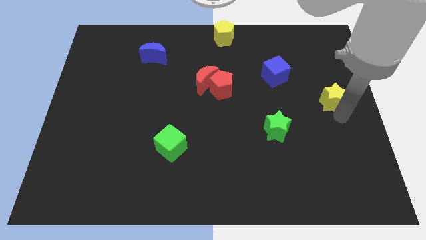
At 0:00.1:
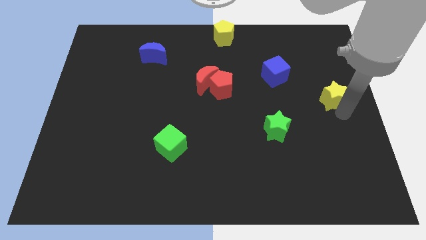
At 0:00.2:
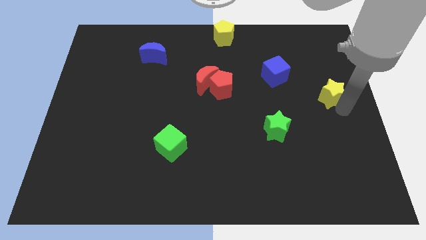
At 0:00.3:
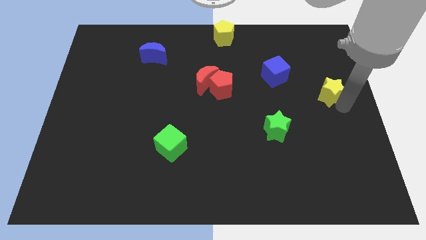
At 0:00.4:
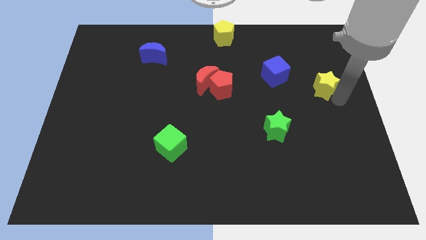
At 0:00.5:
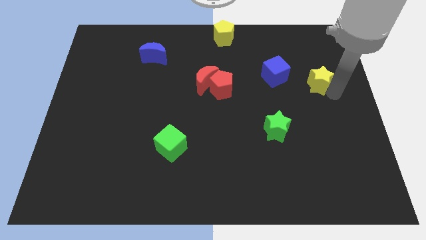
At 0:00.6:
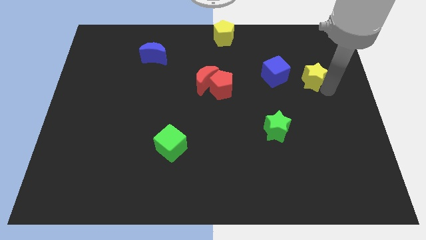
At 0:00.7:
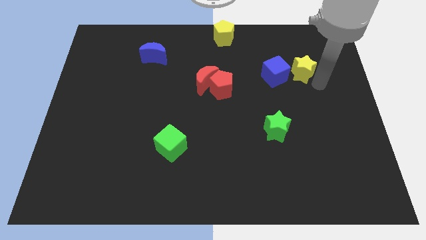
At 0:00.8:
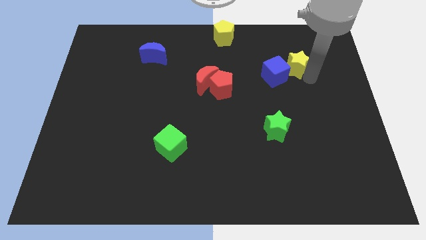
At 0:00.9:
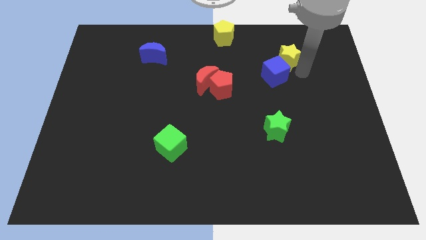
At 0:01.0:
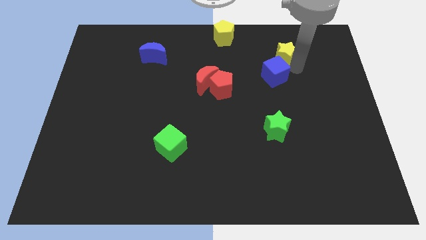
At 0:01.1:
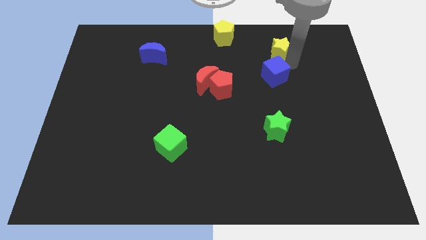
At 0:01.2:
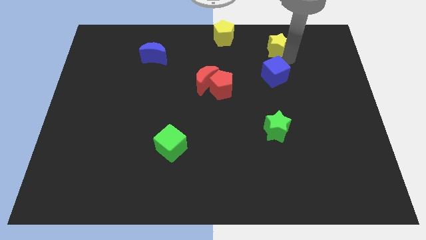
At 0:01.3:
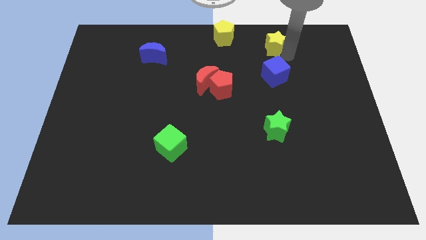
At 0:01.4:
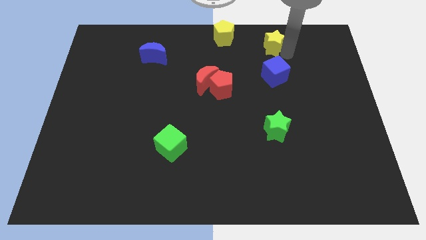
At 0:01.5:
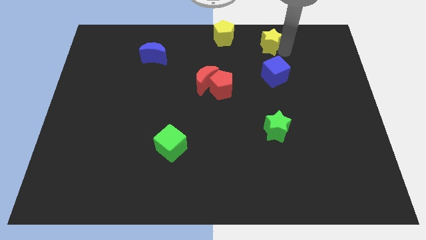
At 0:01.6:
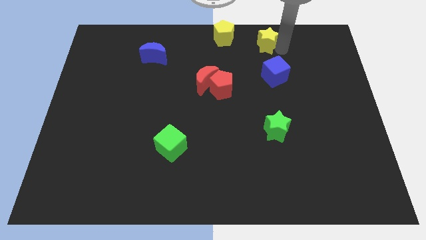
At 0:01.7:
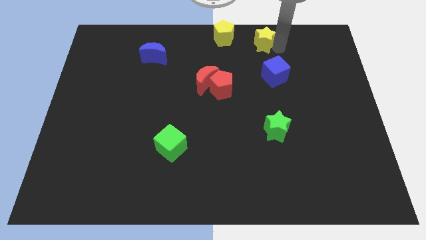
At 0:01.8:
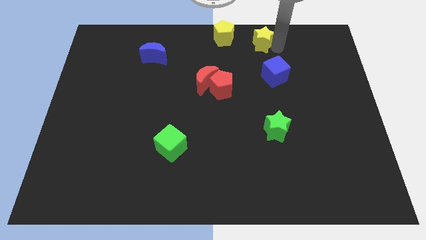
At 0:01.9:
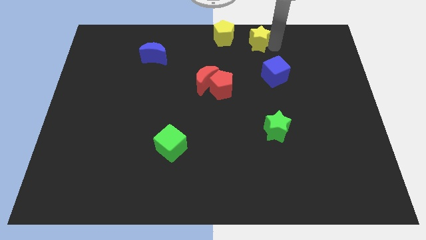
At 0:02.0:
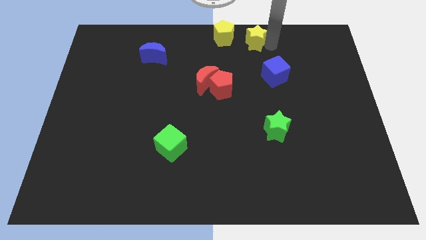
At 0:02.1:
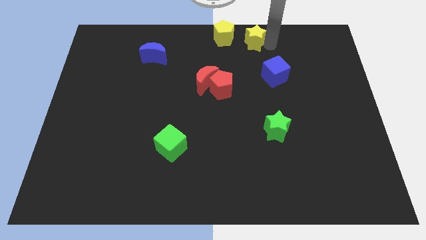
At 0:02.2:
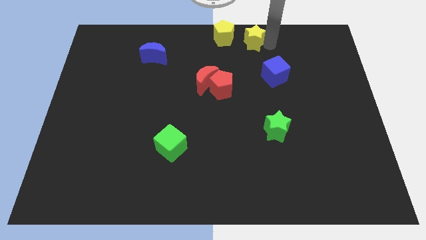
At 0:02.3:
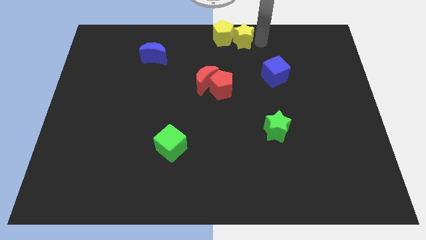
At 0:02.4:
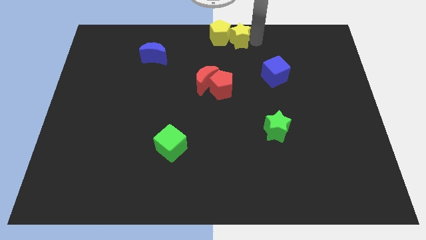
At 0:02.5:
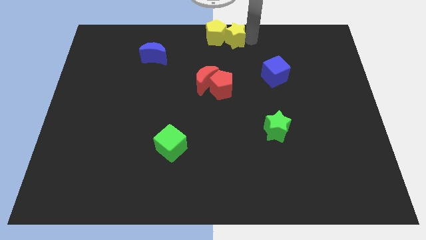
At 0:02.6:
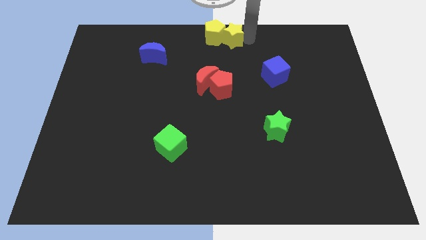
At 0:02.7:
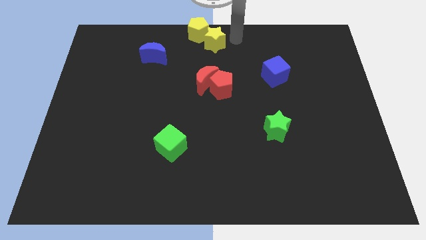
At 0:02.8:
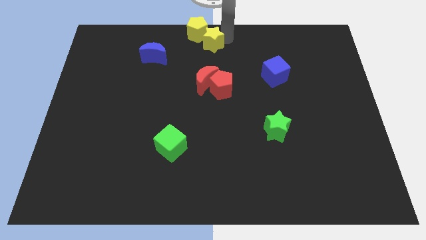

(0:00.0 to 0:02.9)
place yellow star to bottom right of yellow pentagon

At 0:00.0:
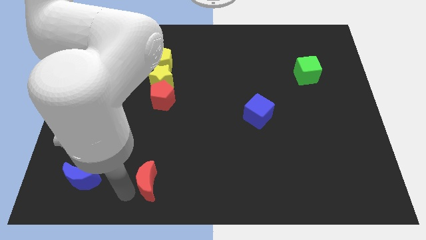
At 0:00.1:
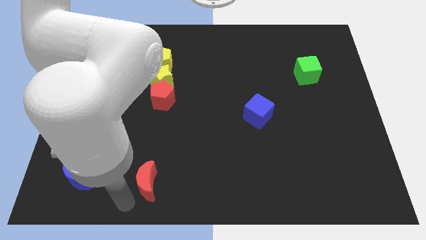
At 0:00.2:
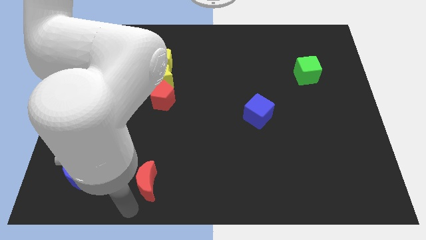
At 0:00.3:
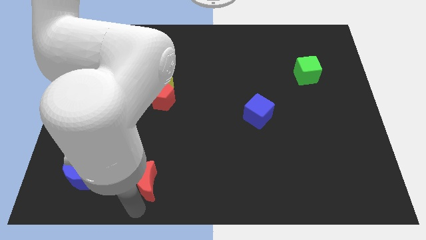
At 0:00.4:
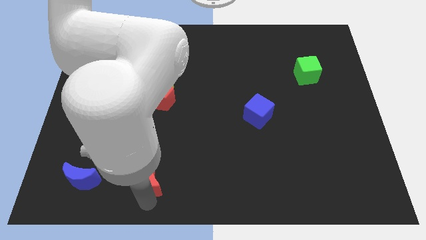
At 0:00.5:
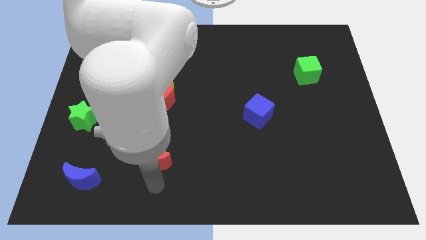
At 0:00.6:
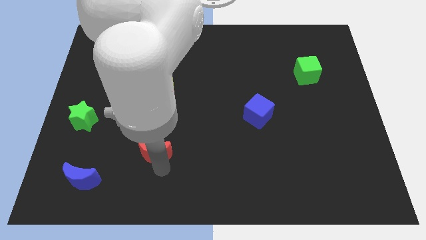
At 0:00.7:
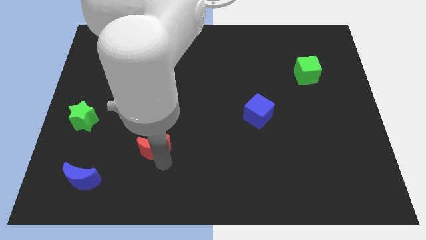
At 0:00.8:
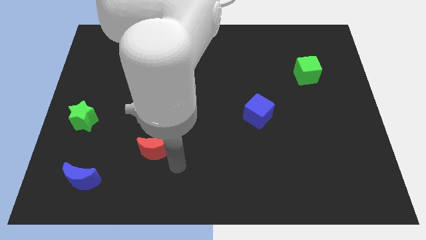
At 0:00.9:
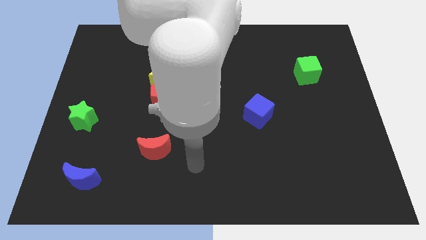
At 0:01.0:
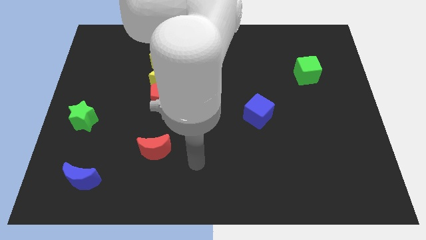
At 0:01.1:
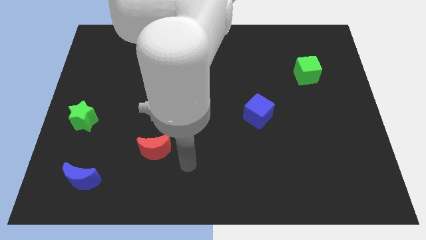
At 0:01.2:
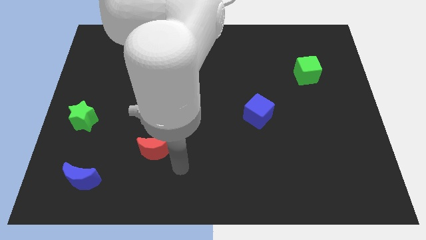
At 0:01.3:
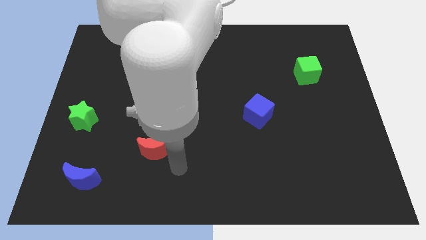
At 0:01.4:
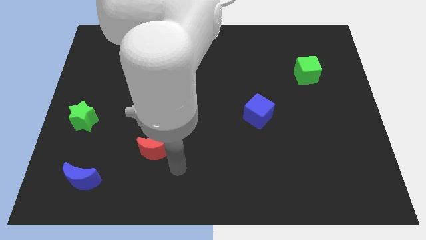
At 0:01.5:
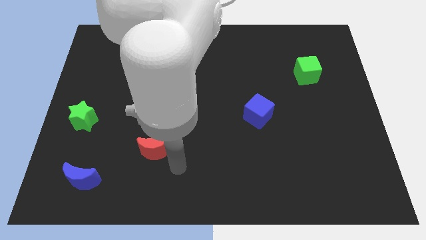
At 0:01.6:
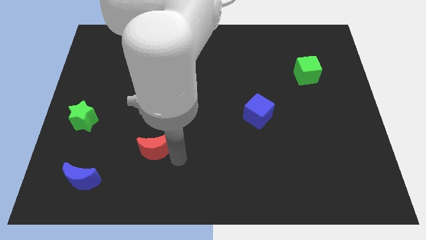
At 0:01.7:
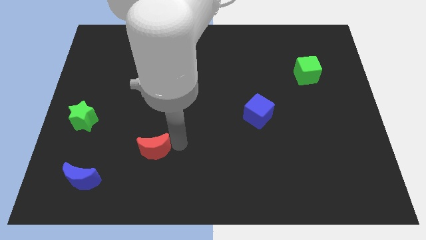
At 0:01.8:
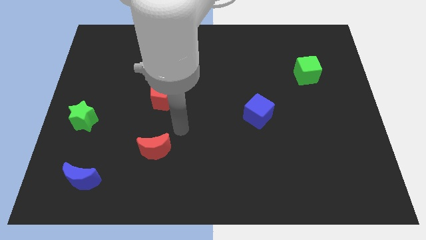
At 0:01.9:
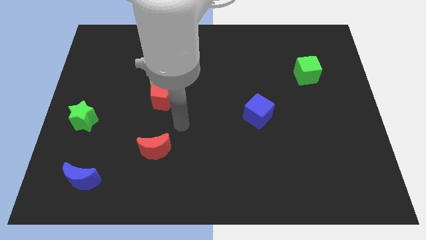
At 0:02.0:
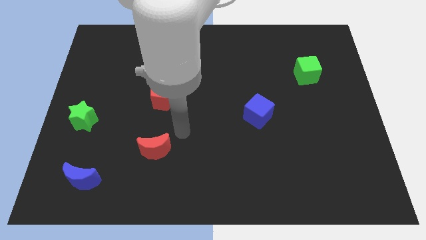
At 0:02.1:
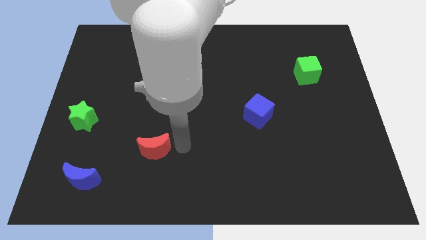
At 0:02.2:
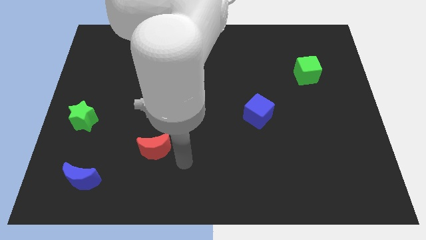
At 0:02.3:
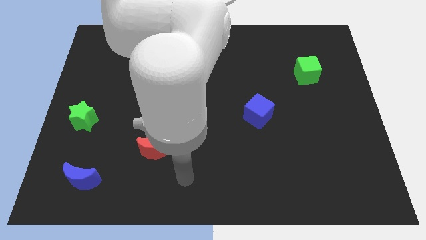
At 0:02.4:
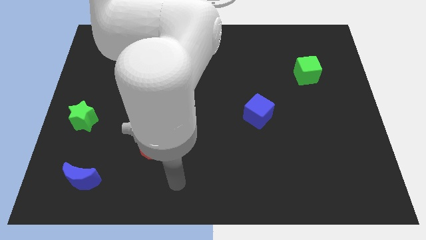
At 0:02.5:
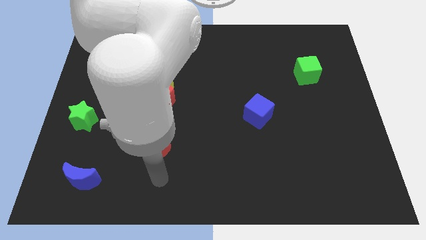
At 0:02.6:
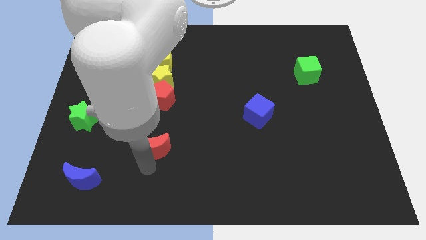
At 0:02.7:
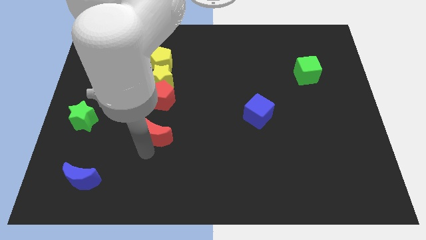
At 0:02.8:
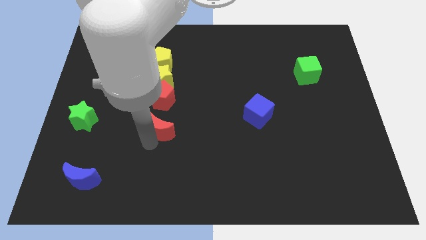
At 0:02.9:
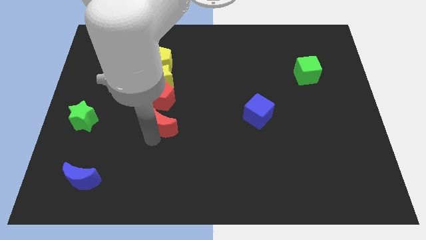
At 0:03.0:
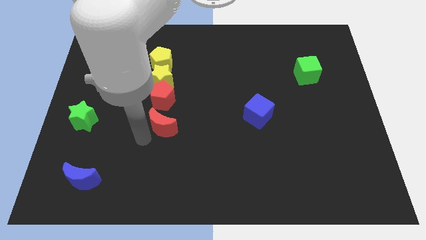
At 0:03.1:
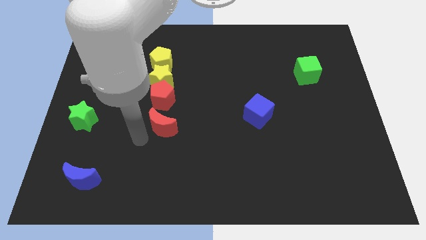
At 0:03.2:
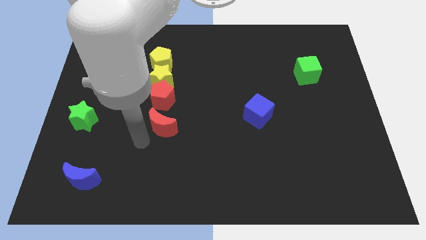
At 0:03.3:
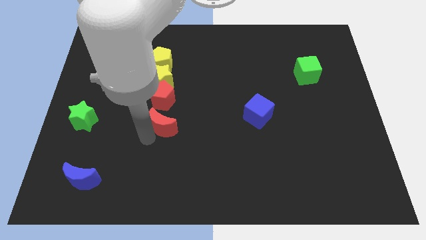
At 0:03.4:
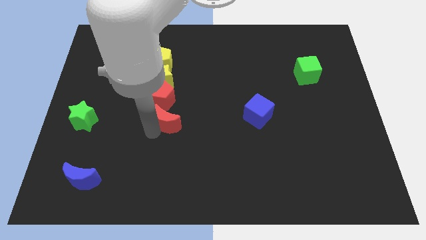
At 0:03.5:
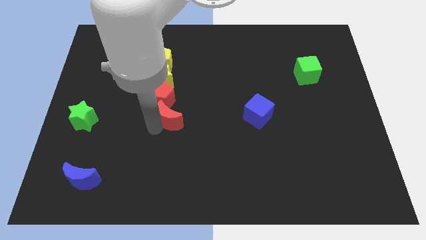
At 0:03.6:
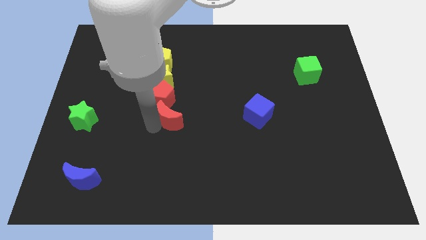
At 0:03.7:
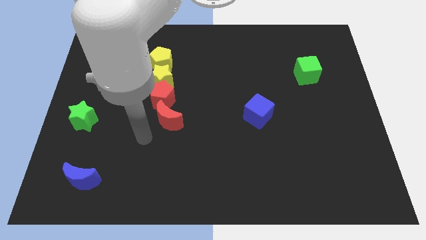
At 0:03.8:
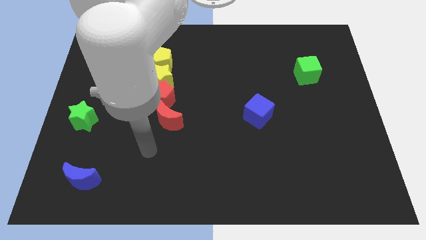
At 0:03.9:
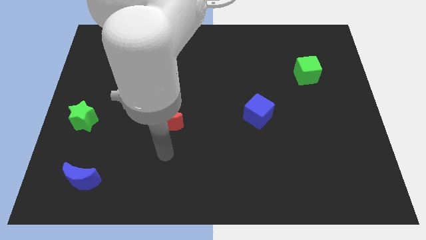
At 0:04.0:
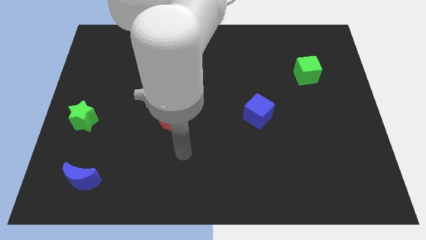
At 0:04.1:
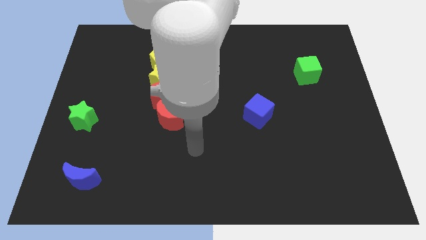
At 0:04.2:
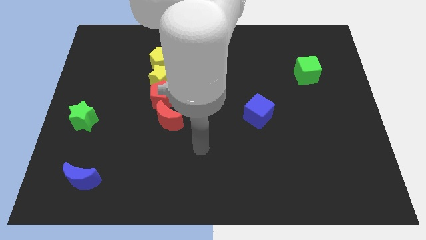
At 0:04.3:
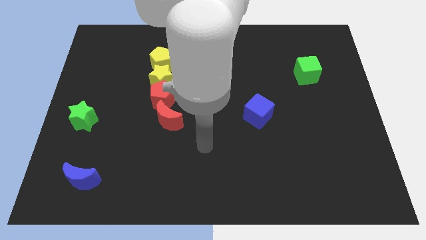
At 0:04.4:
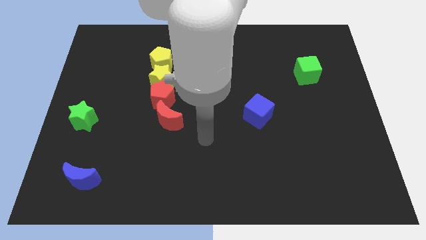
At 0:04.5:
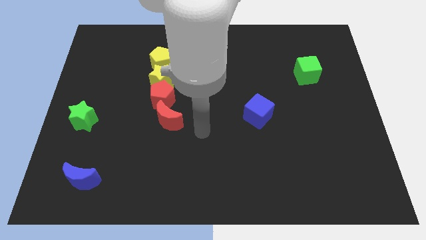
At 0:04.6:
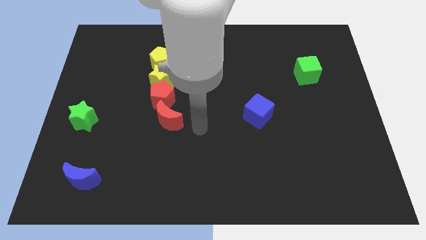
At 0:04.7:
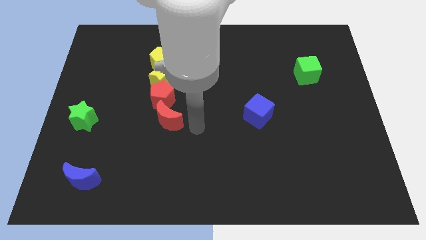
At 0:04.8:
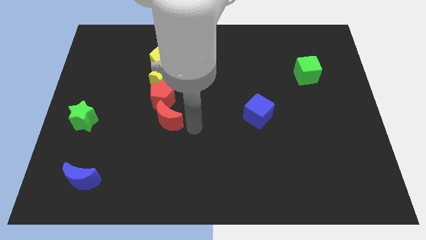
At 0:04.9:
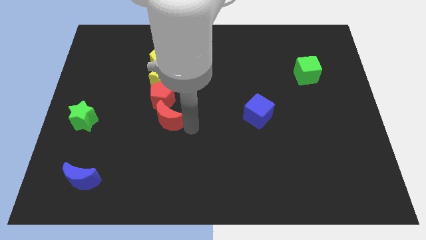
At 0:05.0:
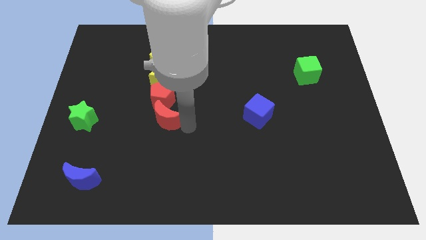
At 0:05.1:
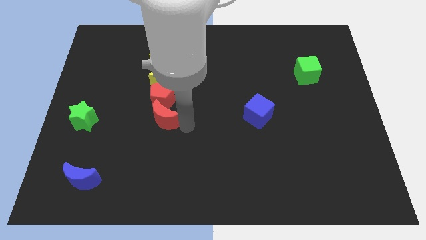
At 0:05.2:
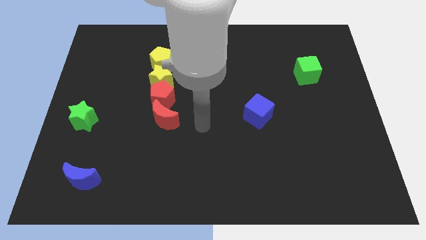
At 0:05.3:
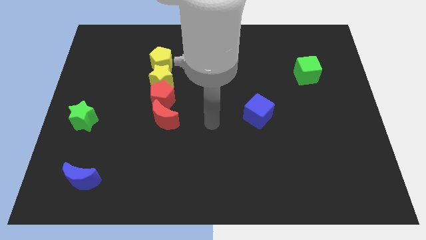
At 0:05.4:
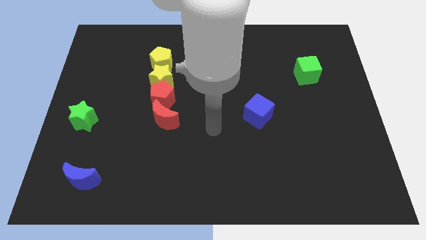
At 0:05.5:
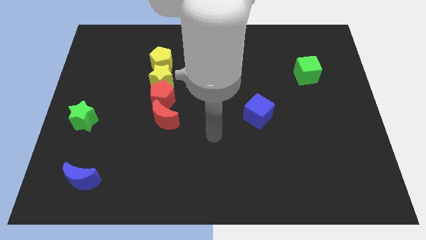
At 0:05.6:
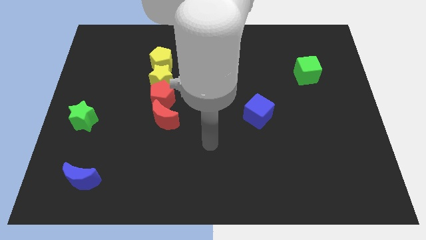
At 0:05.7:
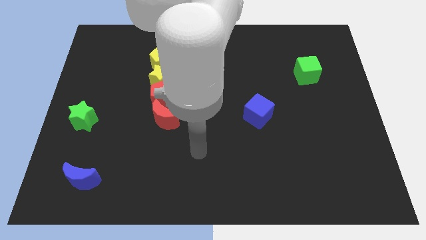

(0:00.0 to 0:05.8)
put the red moon vertically below red pentagon
